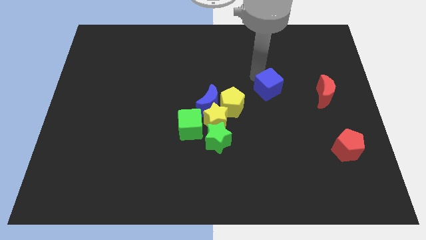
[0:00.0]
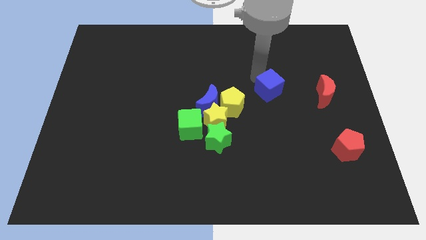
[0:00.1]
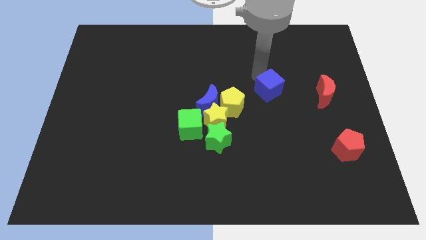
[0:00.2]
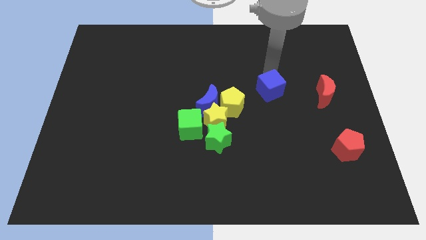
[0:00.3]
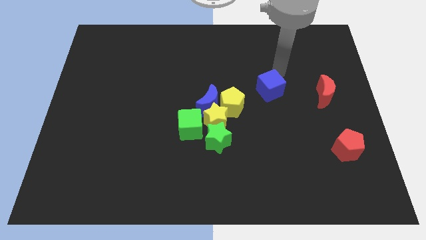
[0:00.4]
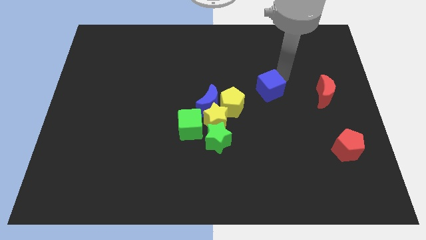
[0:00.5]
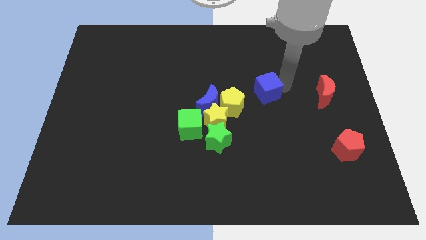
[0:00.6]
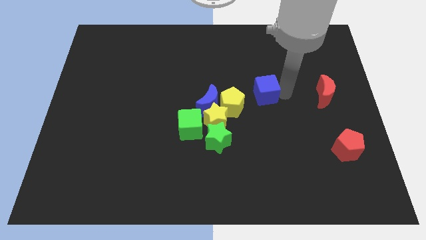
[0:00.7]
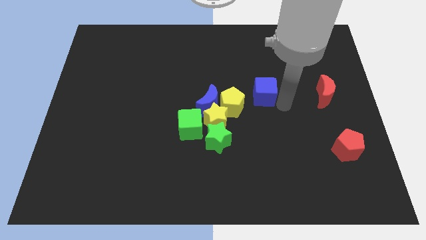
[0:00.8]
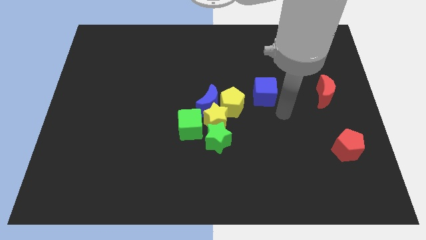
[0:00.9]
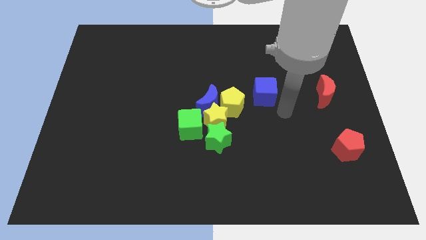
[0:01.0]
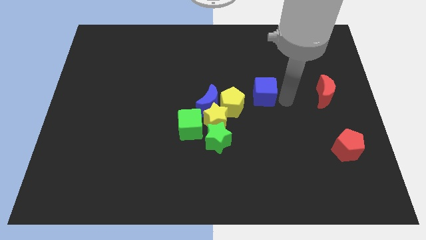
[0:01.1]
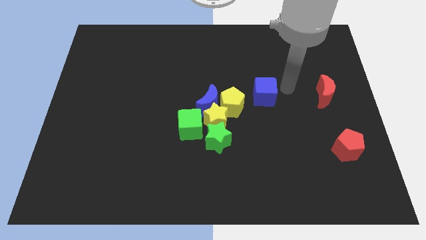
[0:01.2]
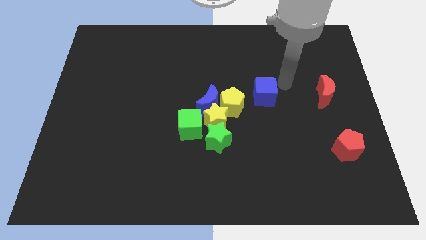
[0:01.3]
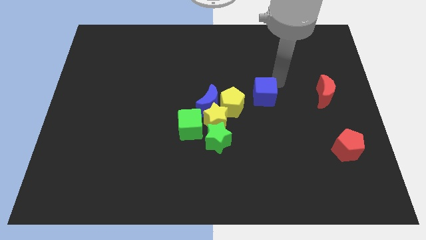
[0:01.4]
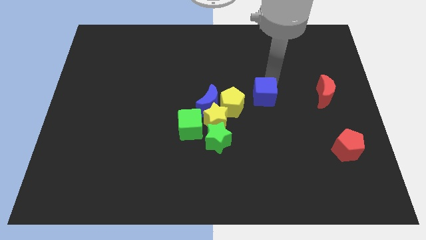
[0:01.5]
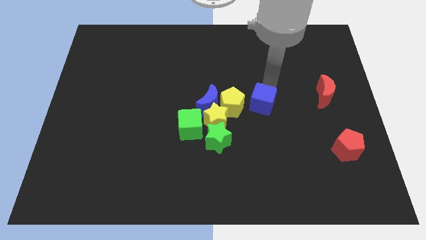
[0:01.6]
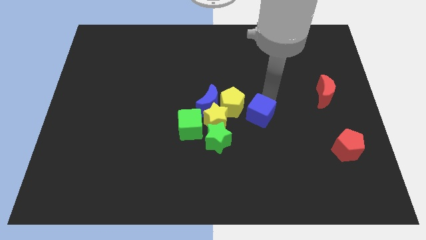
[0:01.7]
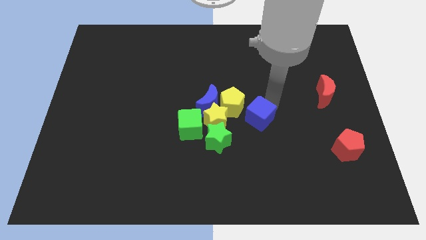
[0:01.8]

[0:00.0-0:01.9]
place the blue cube diagonally bottom right of the yellow pentagon

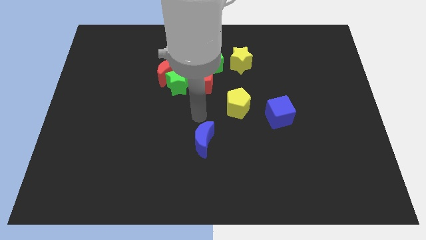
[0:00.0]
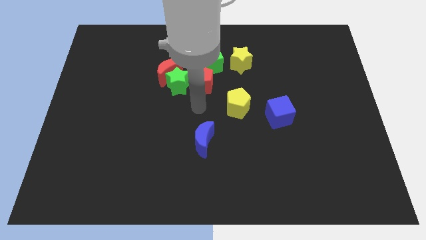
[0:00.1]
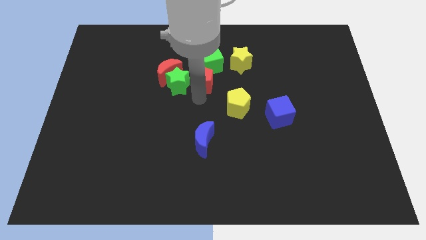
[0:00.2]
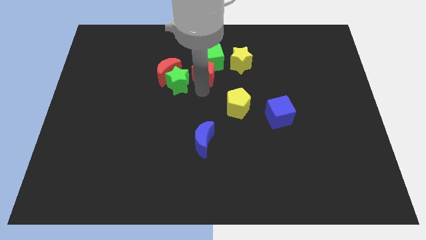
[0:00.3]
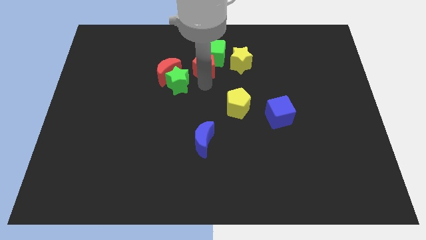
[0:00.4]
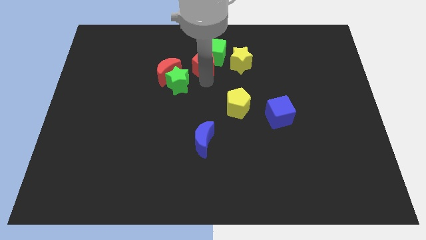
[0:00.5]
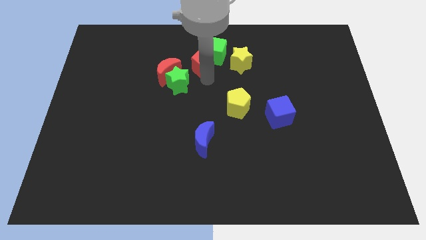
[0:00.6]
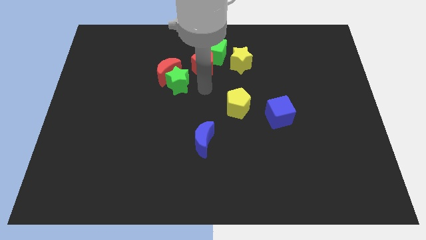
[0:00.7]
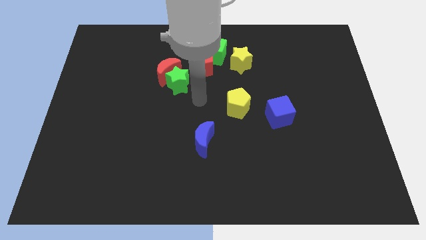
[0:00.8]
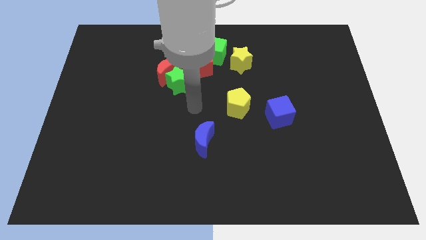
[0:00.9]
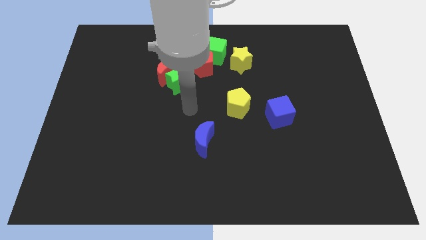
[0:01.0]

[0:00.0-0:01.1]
slide the red pentagon into the green cube

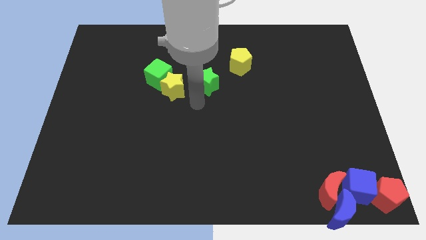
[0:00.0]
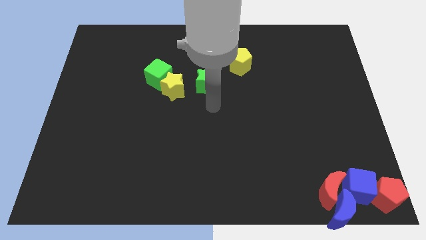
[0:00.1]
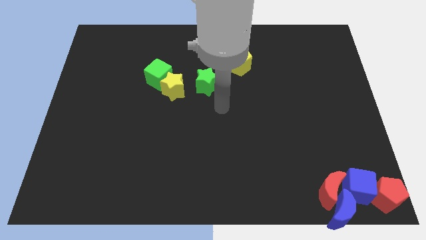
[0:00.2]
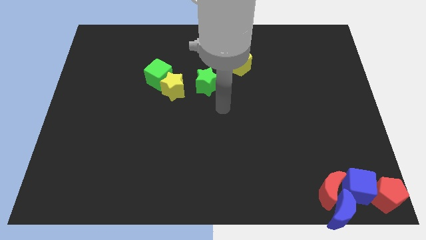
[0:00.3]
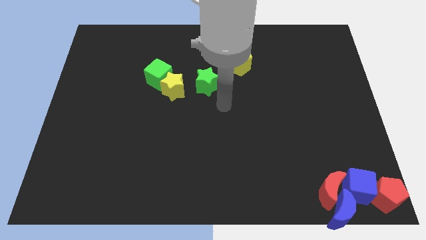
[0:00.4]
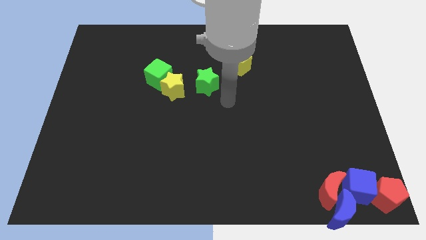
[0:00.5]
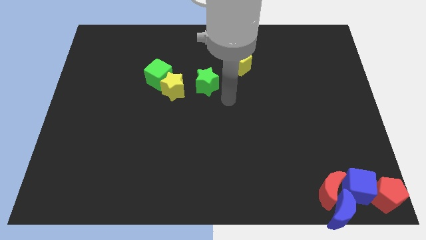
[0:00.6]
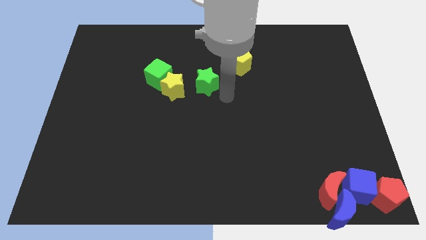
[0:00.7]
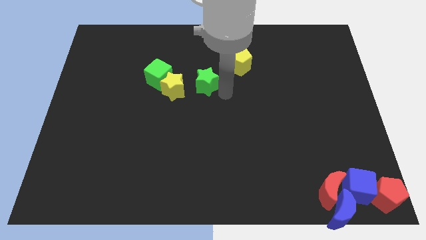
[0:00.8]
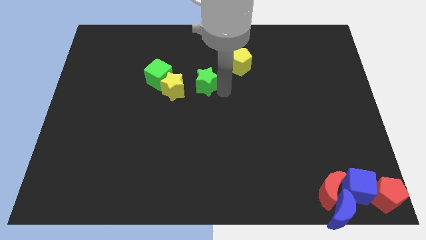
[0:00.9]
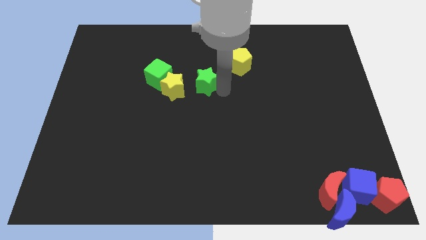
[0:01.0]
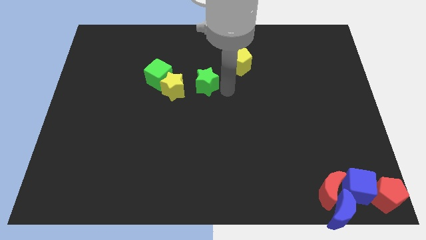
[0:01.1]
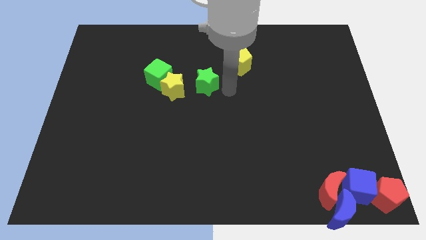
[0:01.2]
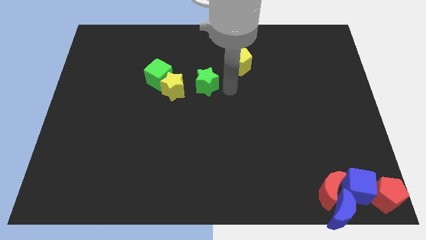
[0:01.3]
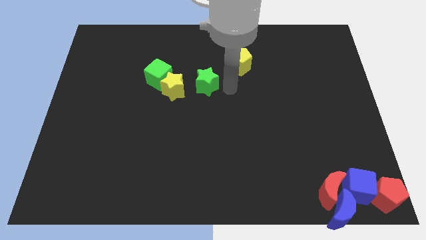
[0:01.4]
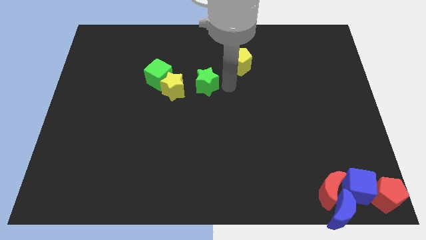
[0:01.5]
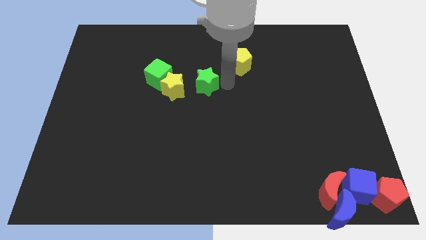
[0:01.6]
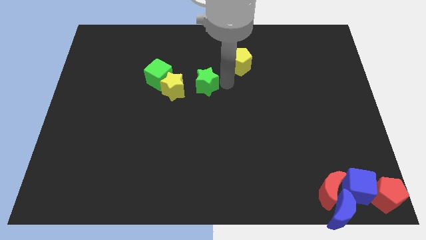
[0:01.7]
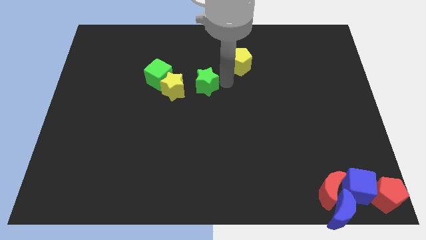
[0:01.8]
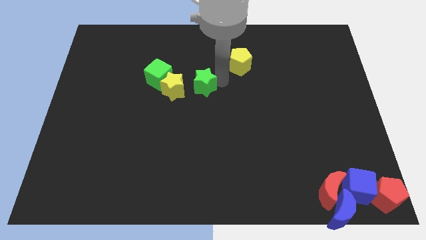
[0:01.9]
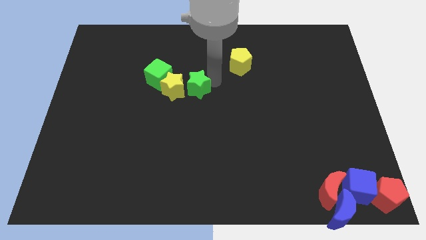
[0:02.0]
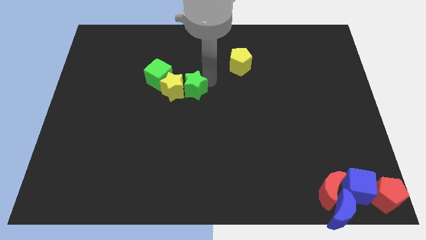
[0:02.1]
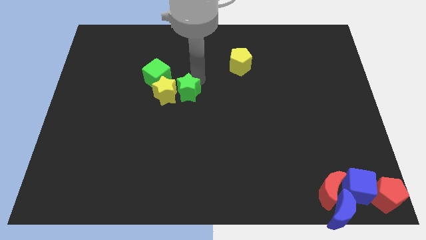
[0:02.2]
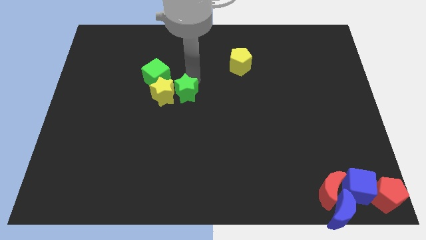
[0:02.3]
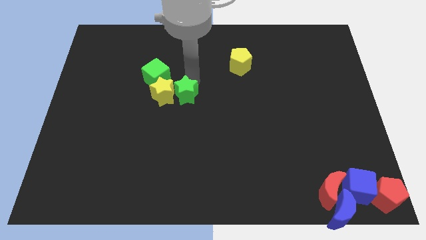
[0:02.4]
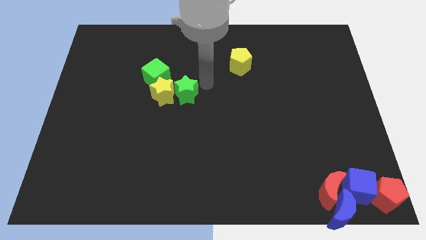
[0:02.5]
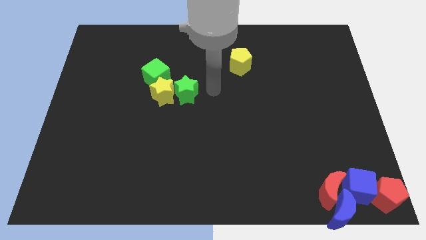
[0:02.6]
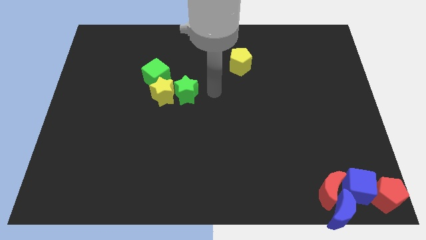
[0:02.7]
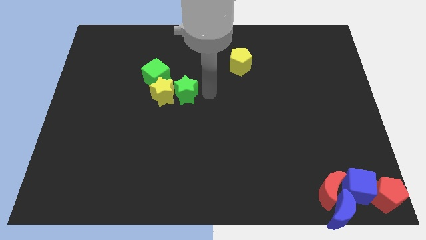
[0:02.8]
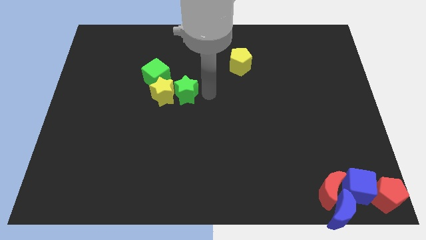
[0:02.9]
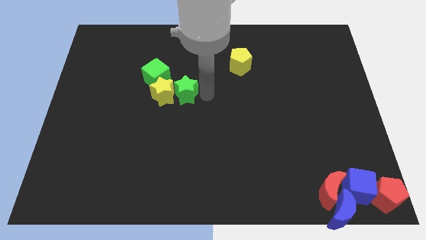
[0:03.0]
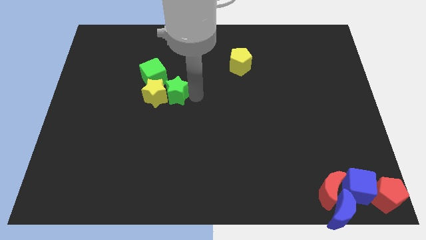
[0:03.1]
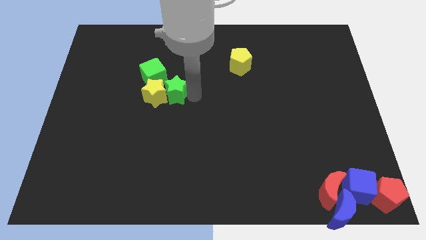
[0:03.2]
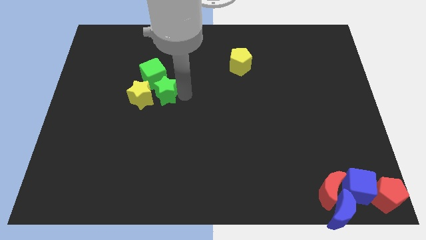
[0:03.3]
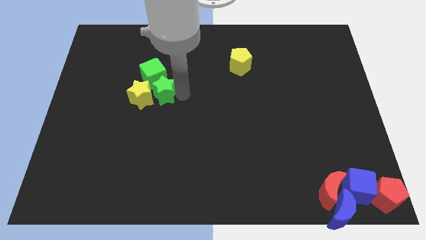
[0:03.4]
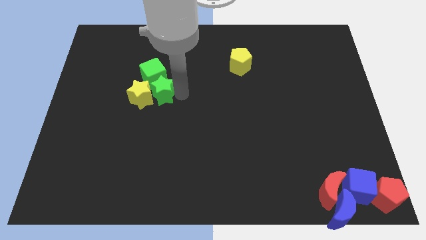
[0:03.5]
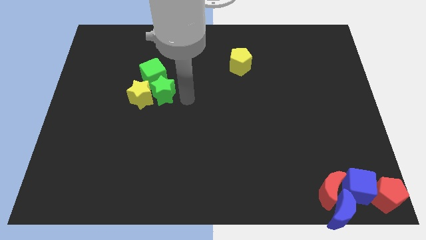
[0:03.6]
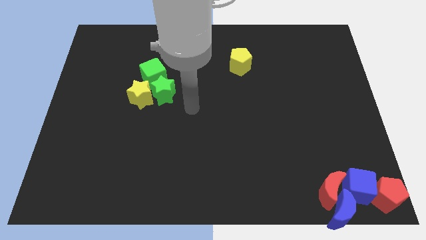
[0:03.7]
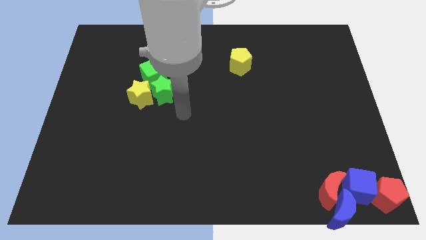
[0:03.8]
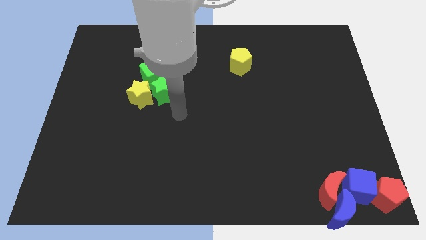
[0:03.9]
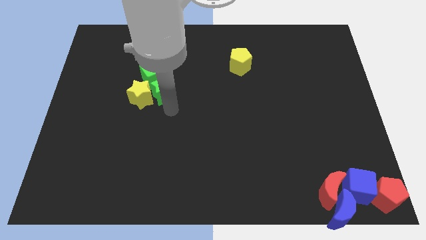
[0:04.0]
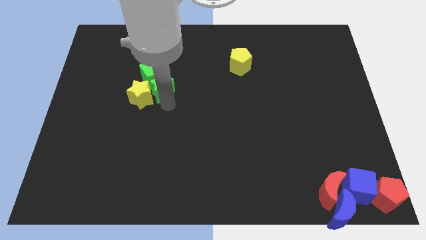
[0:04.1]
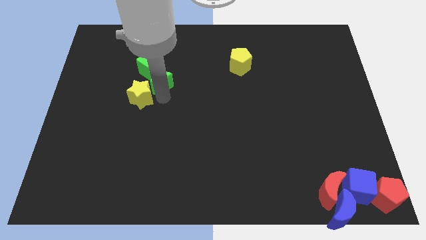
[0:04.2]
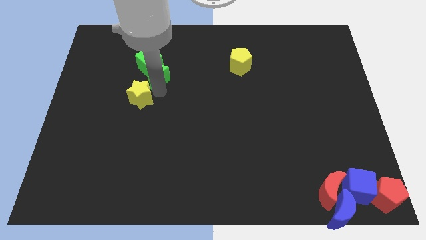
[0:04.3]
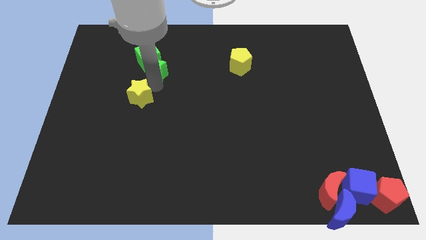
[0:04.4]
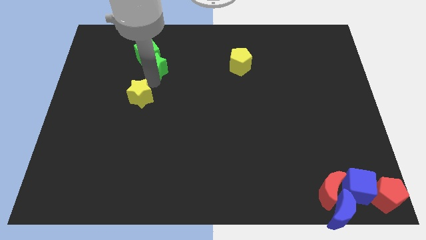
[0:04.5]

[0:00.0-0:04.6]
push the green star into the yellow star and green cube

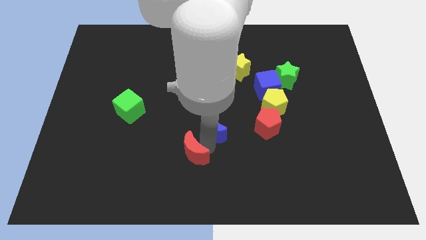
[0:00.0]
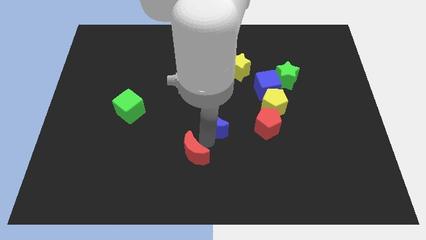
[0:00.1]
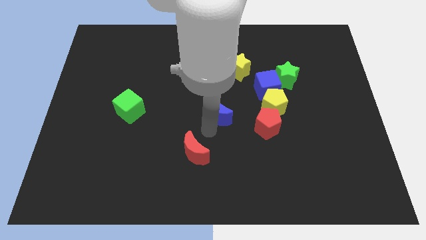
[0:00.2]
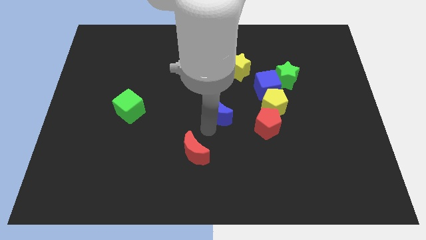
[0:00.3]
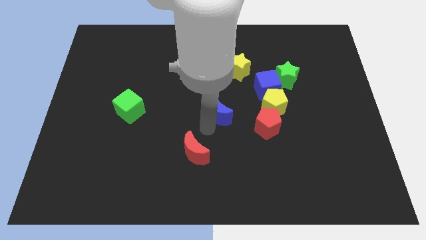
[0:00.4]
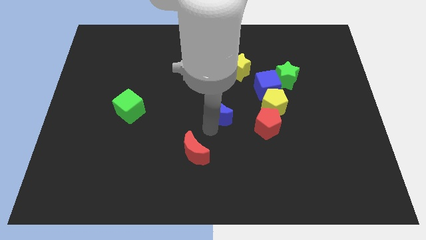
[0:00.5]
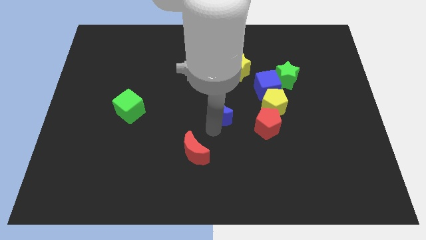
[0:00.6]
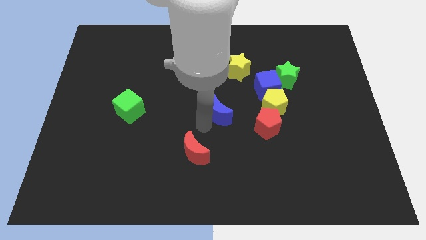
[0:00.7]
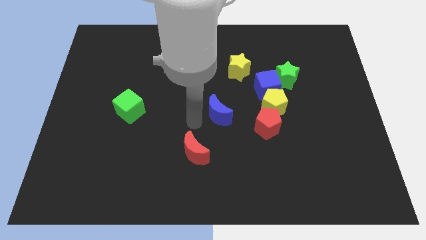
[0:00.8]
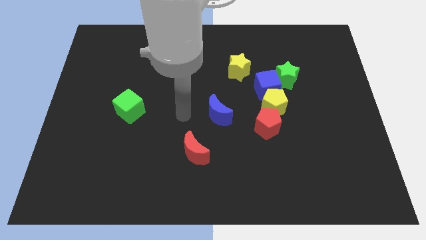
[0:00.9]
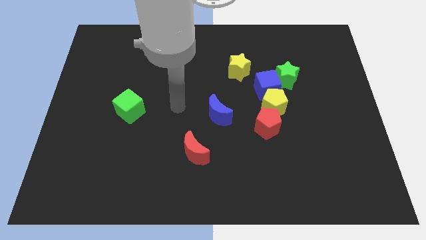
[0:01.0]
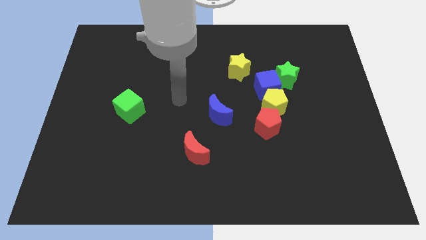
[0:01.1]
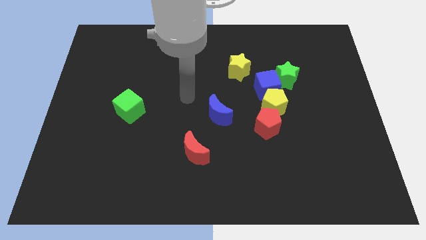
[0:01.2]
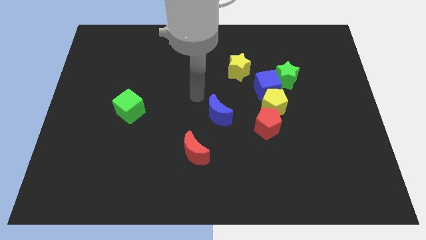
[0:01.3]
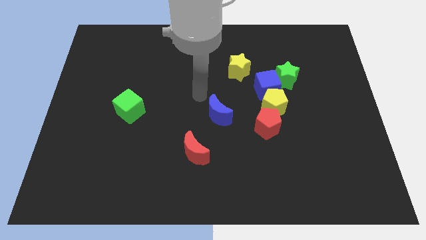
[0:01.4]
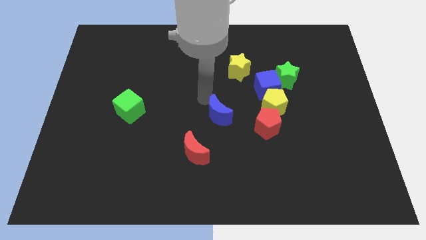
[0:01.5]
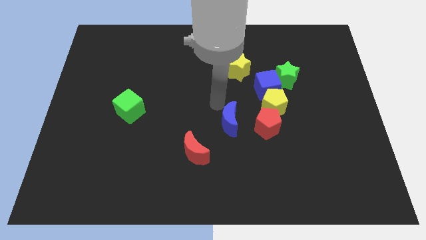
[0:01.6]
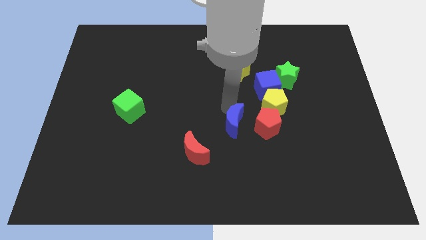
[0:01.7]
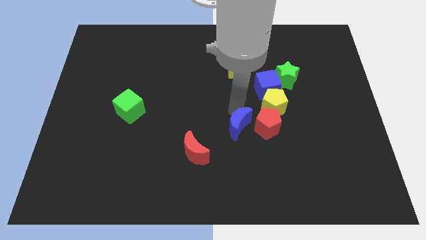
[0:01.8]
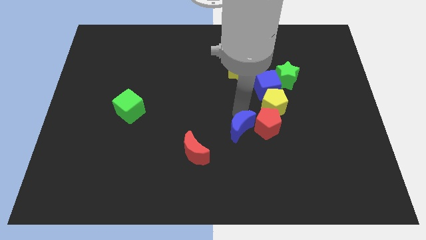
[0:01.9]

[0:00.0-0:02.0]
move the blue moon into the red pentagon
